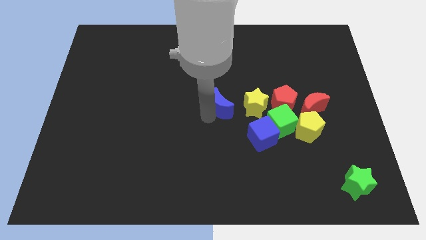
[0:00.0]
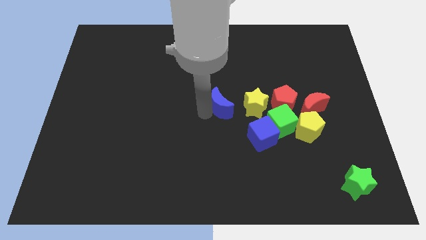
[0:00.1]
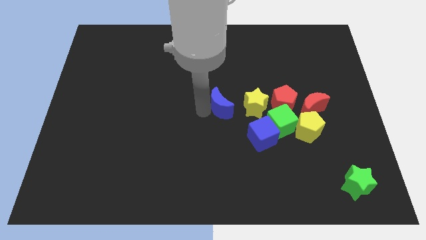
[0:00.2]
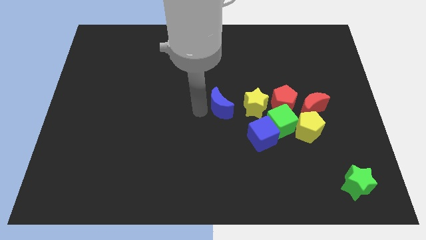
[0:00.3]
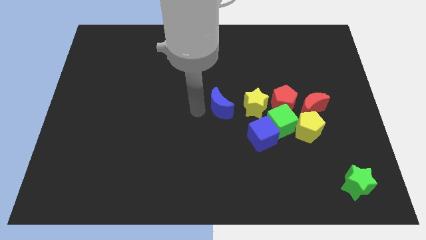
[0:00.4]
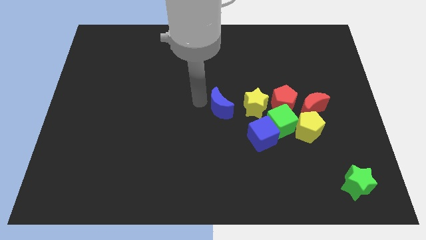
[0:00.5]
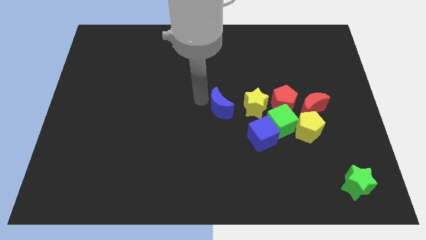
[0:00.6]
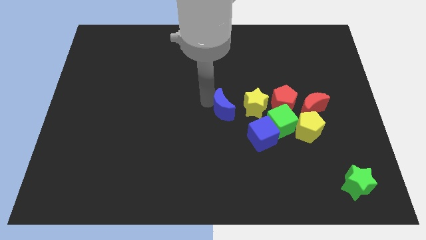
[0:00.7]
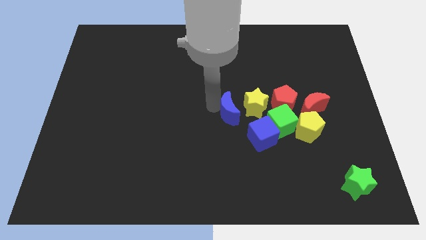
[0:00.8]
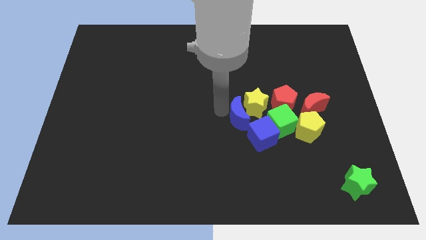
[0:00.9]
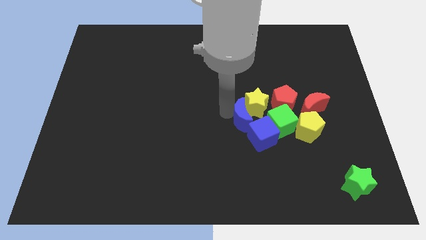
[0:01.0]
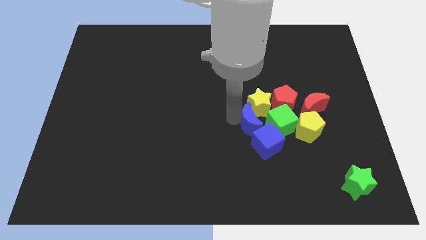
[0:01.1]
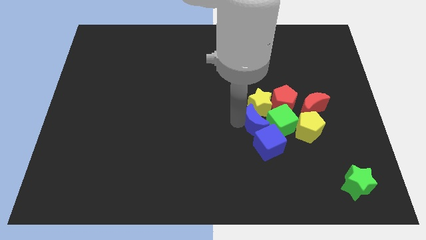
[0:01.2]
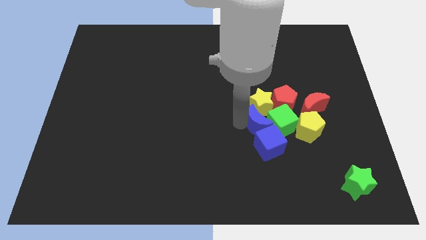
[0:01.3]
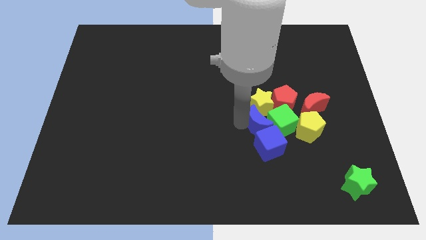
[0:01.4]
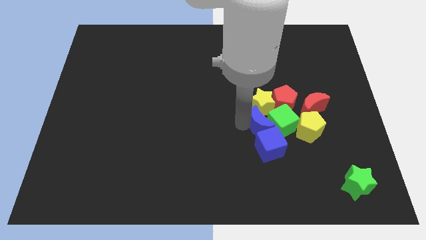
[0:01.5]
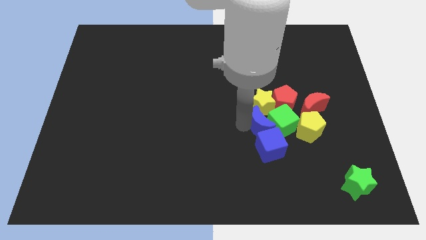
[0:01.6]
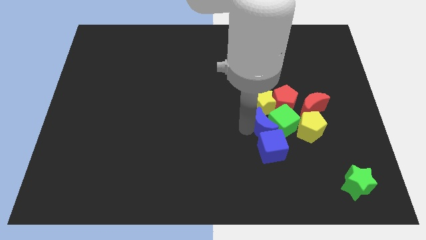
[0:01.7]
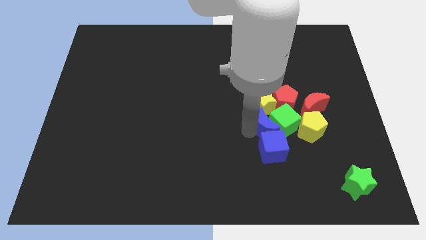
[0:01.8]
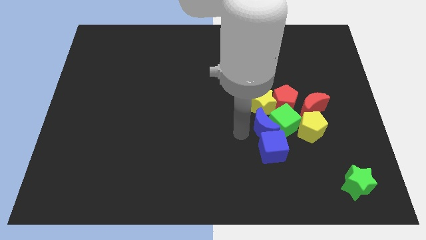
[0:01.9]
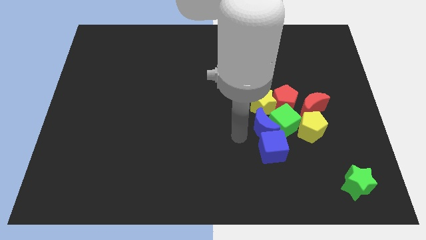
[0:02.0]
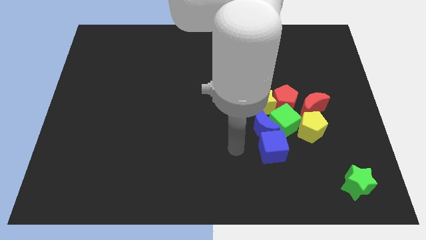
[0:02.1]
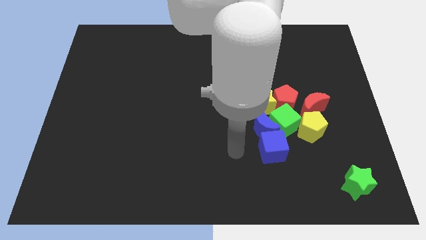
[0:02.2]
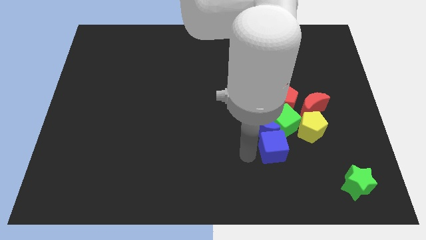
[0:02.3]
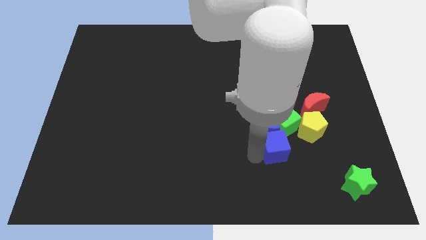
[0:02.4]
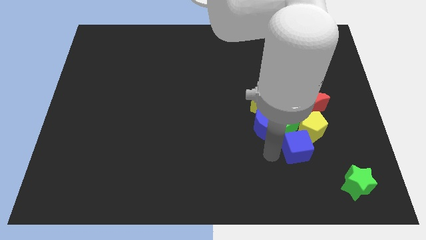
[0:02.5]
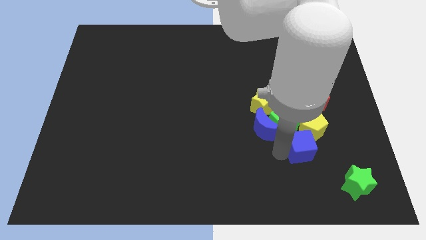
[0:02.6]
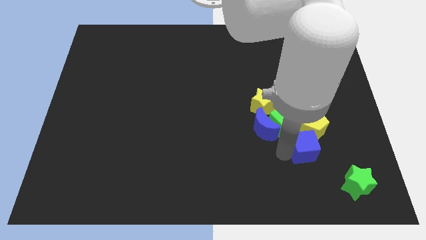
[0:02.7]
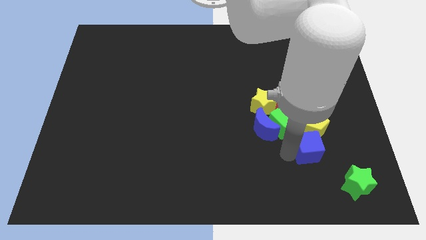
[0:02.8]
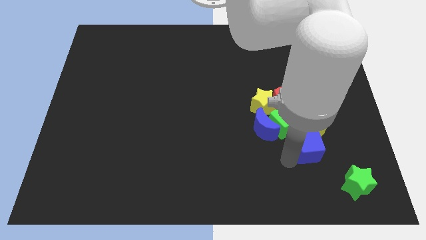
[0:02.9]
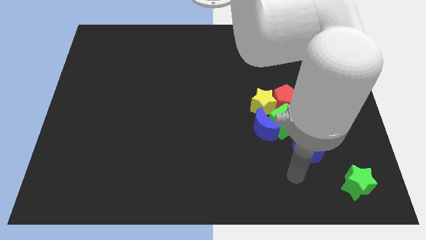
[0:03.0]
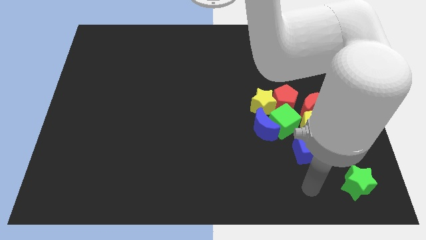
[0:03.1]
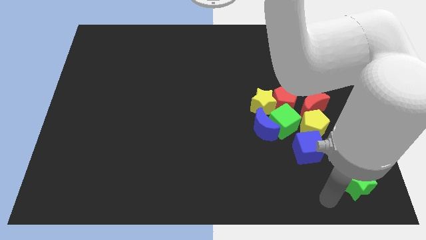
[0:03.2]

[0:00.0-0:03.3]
push blue blocks into the group of blocks

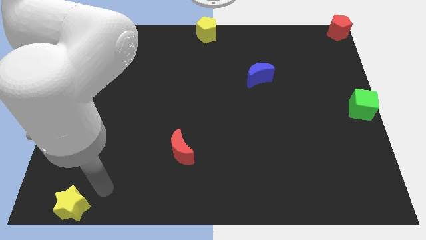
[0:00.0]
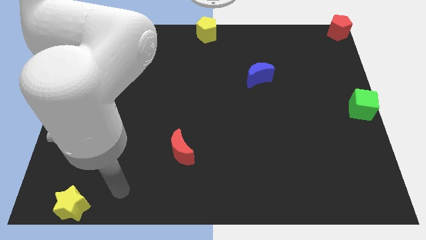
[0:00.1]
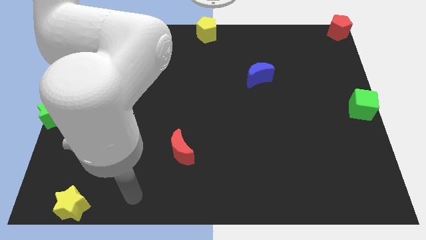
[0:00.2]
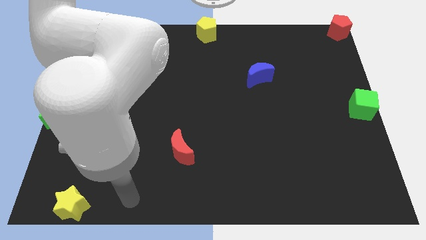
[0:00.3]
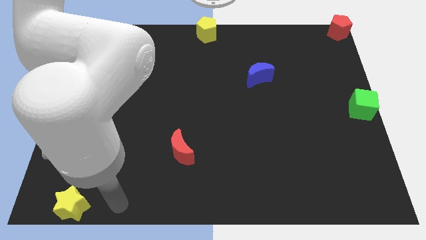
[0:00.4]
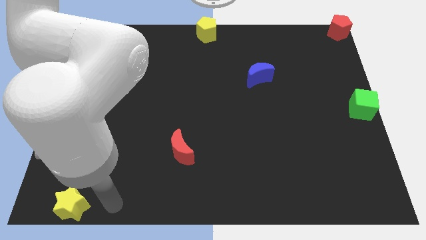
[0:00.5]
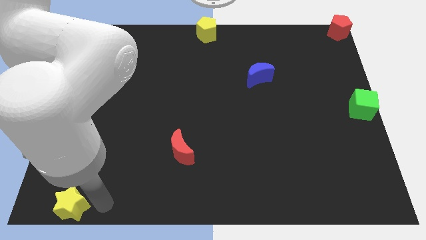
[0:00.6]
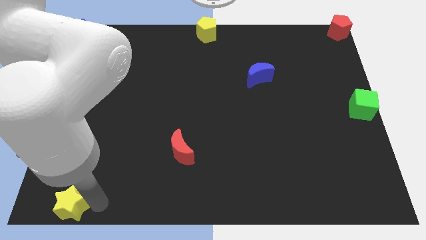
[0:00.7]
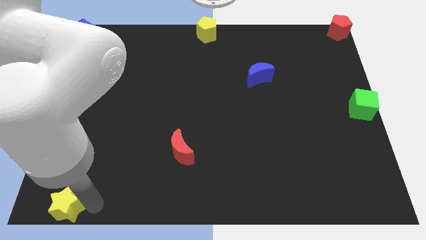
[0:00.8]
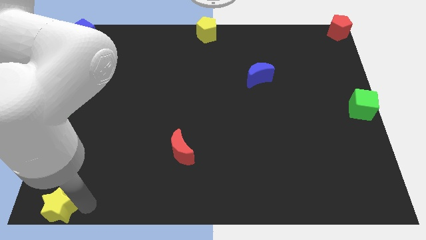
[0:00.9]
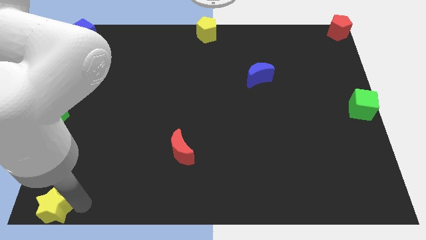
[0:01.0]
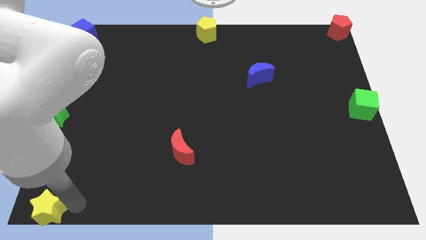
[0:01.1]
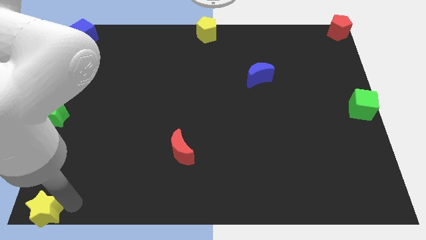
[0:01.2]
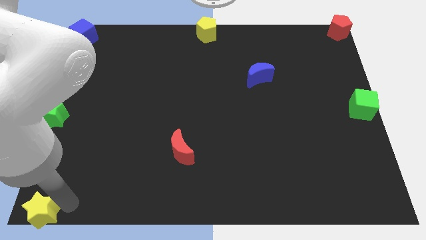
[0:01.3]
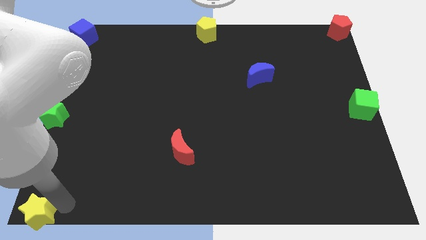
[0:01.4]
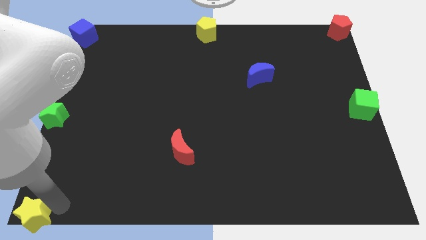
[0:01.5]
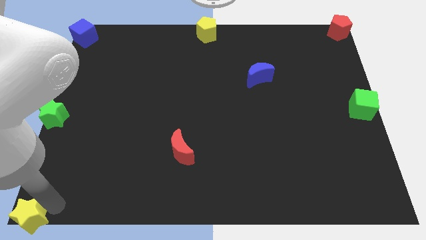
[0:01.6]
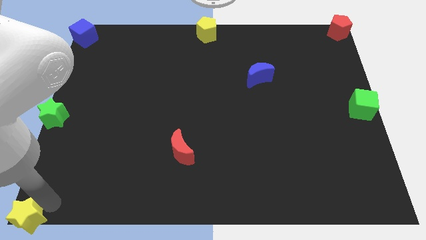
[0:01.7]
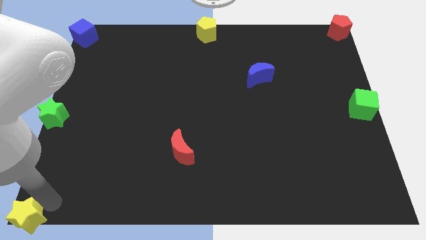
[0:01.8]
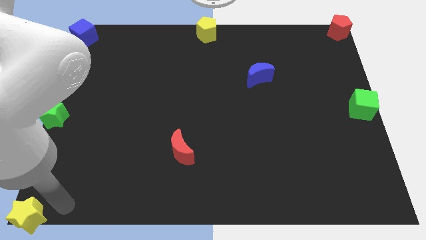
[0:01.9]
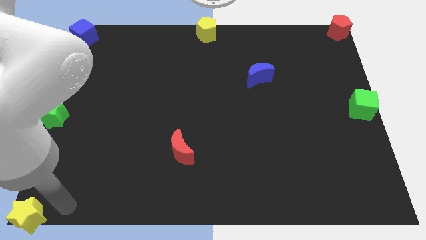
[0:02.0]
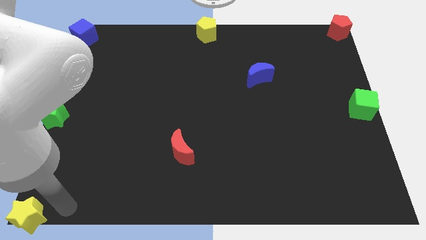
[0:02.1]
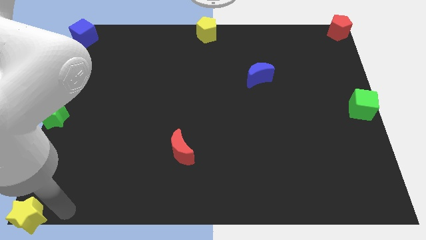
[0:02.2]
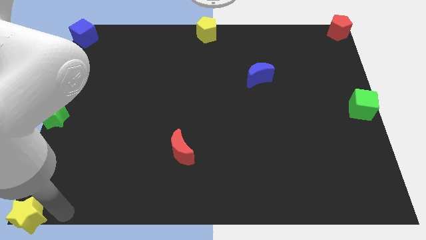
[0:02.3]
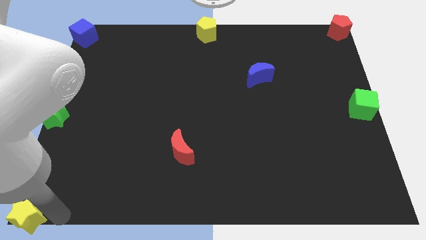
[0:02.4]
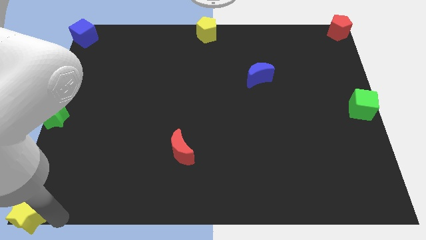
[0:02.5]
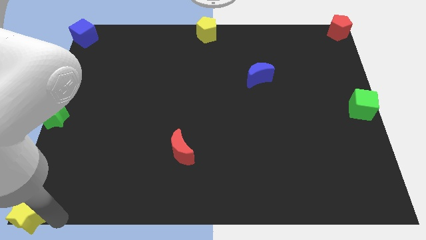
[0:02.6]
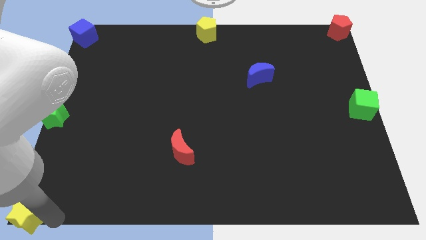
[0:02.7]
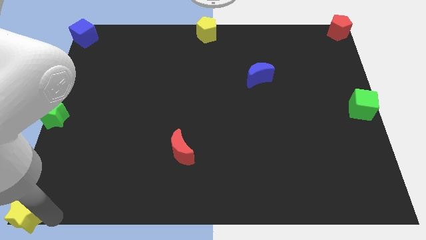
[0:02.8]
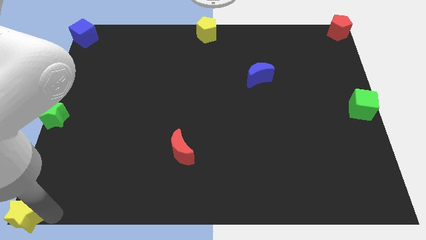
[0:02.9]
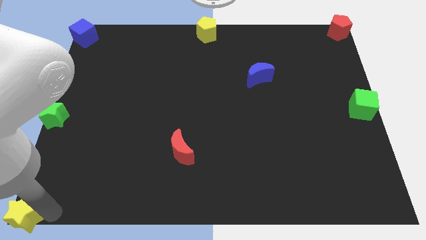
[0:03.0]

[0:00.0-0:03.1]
move the yellow star to the bottom left corner

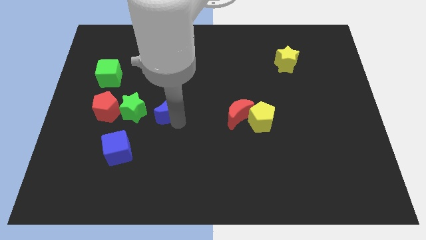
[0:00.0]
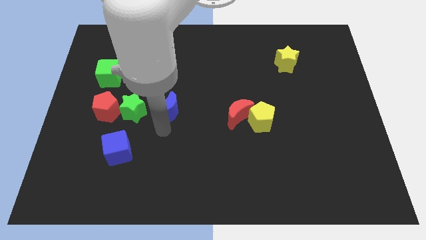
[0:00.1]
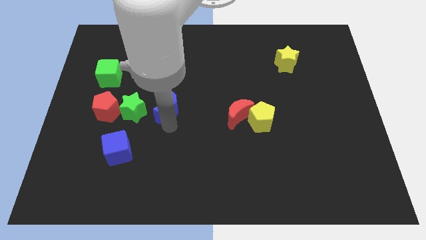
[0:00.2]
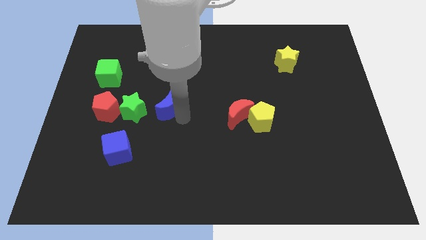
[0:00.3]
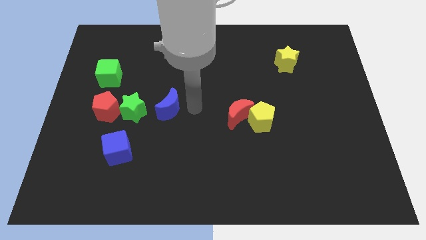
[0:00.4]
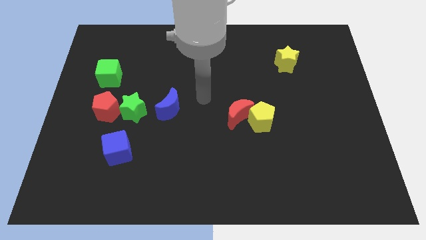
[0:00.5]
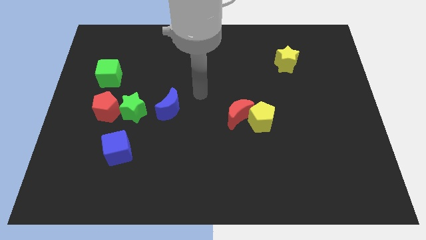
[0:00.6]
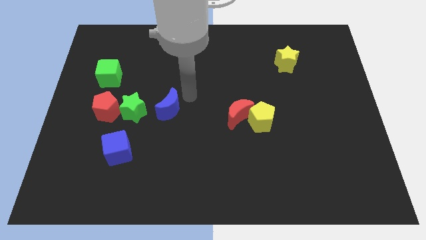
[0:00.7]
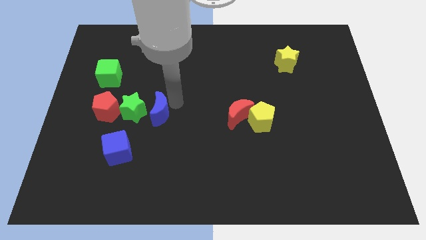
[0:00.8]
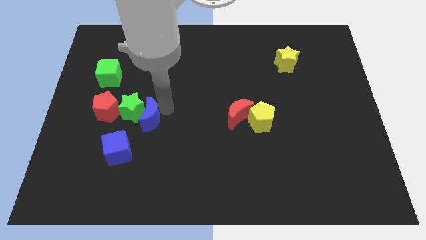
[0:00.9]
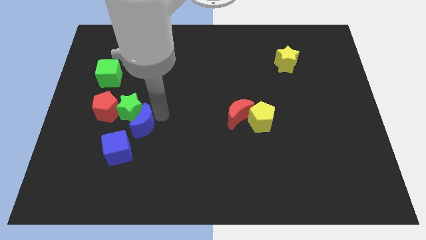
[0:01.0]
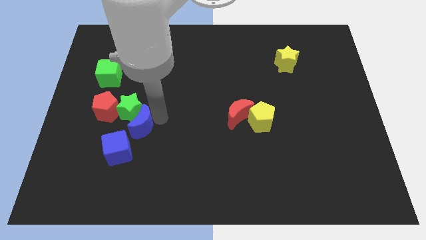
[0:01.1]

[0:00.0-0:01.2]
push blue moon into green star

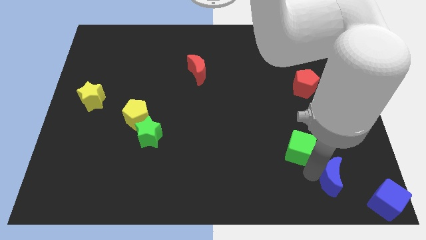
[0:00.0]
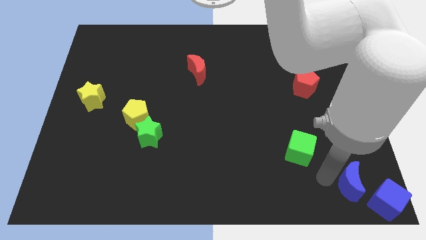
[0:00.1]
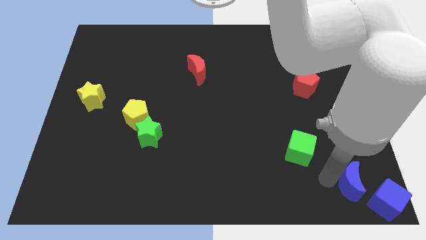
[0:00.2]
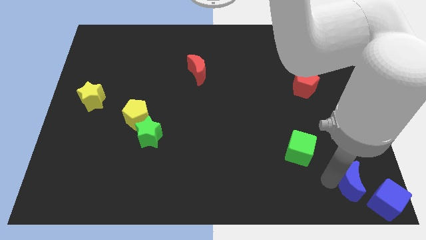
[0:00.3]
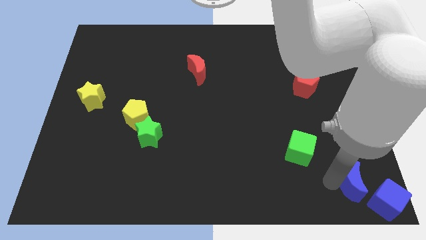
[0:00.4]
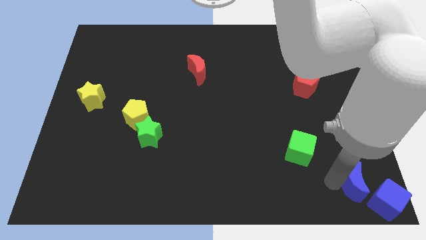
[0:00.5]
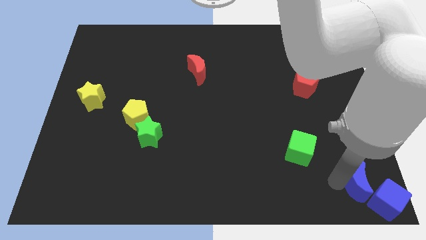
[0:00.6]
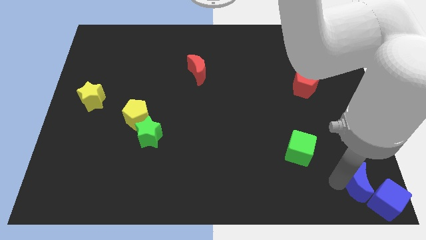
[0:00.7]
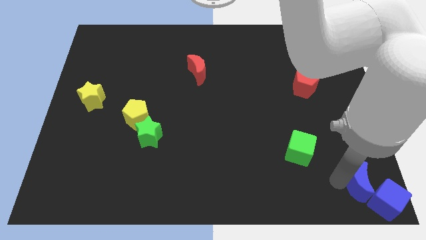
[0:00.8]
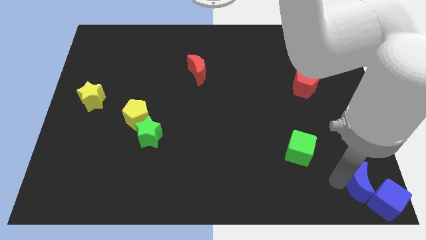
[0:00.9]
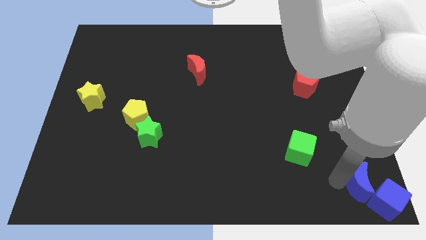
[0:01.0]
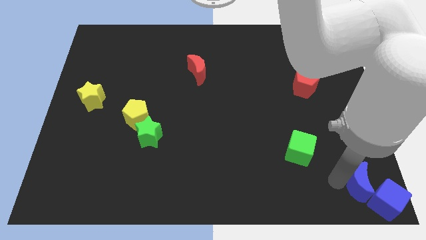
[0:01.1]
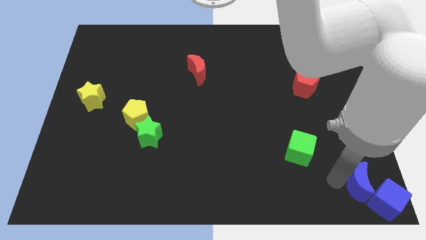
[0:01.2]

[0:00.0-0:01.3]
move the blue moon into blue cube
